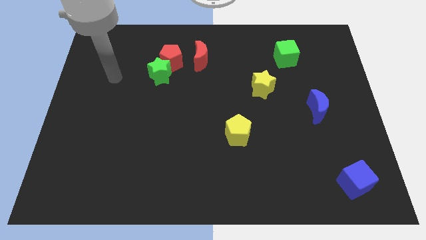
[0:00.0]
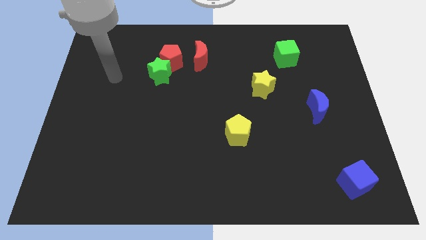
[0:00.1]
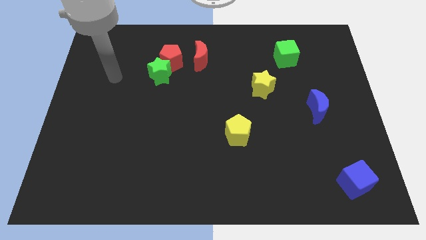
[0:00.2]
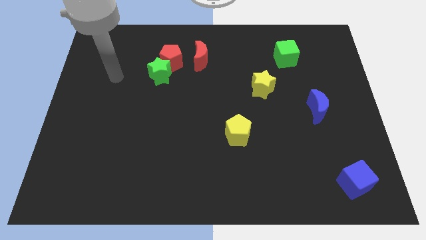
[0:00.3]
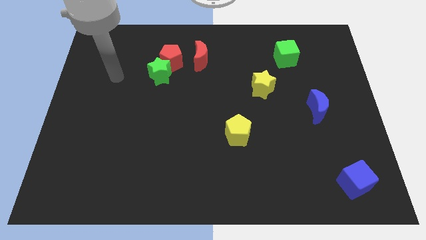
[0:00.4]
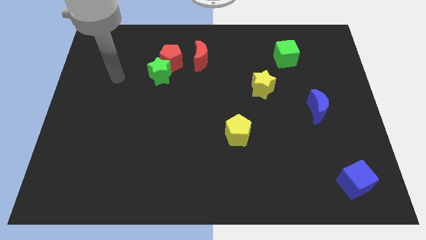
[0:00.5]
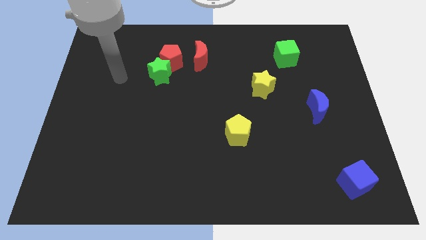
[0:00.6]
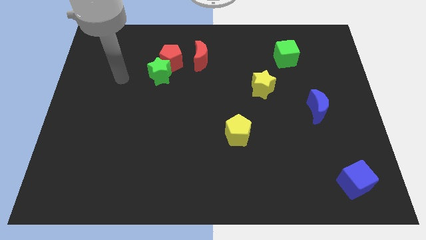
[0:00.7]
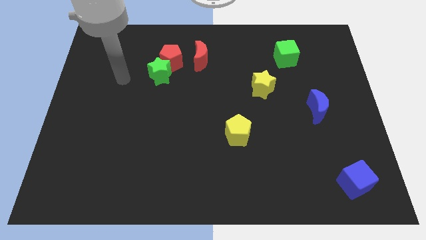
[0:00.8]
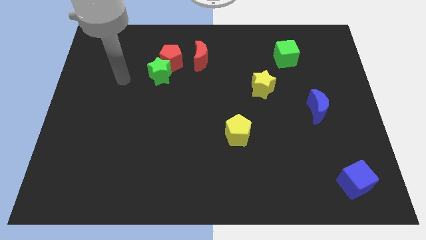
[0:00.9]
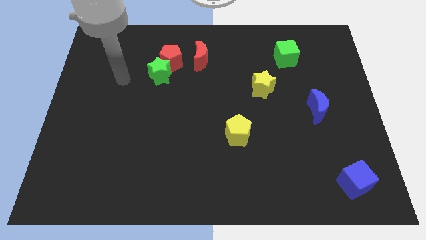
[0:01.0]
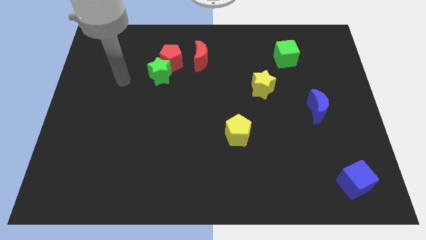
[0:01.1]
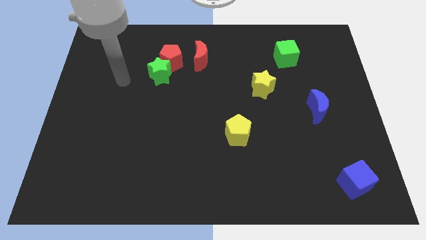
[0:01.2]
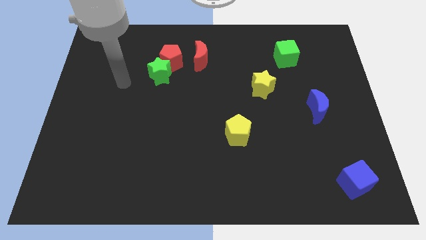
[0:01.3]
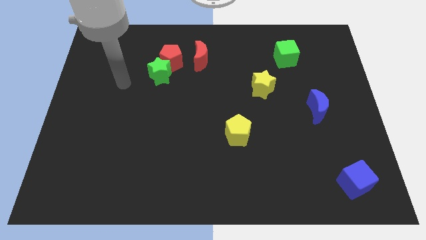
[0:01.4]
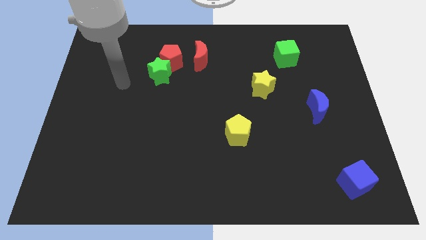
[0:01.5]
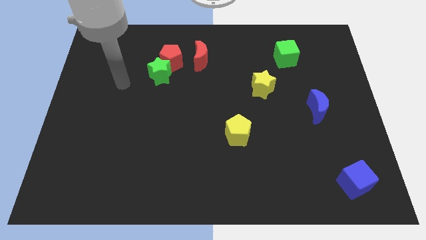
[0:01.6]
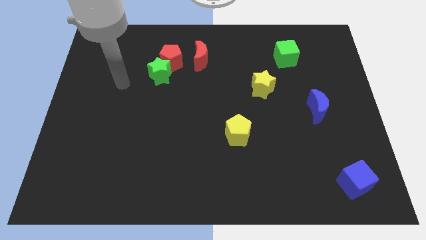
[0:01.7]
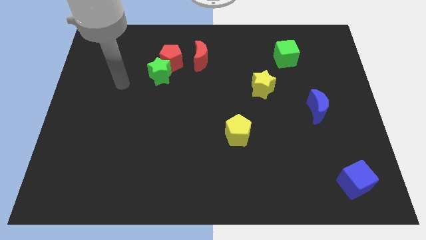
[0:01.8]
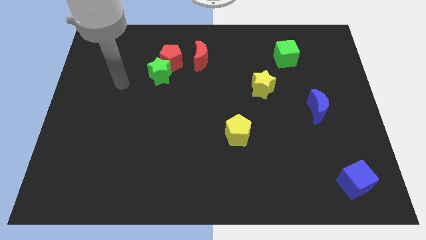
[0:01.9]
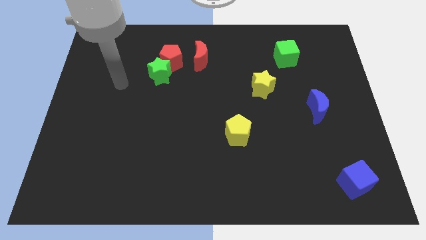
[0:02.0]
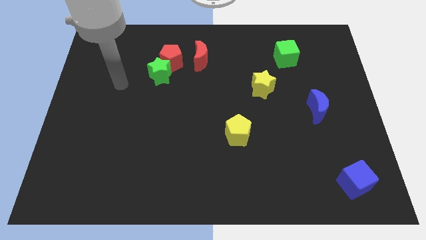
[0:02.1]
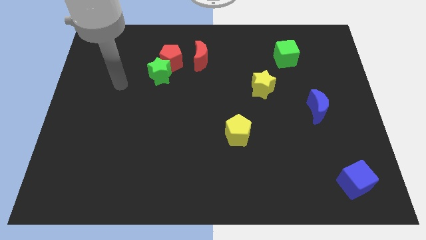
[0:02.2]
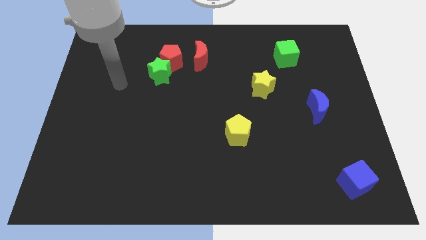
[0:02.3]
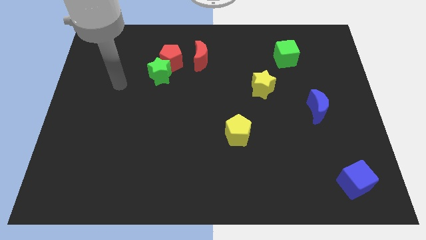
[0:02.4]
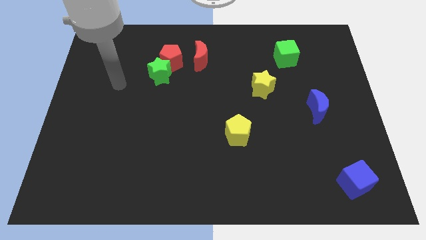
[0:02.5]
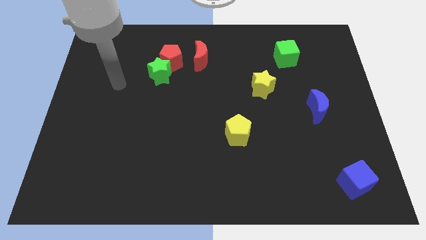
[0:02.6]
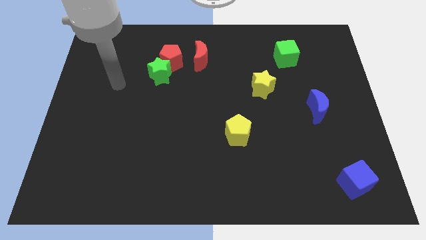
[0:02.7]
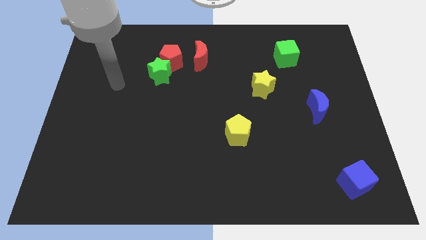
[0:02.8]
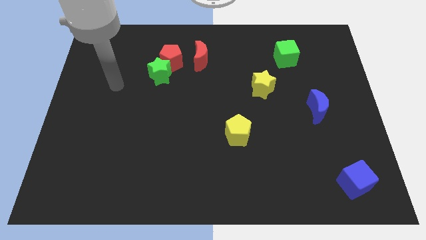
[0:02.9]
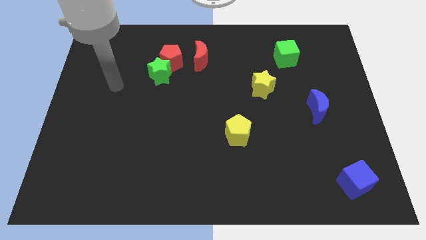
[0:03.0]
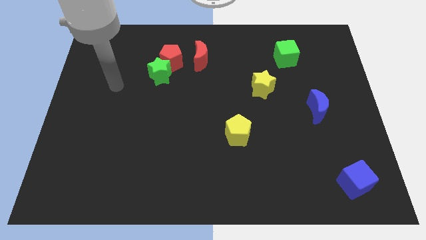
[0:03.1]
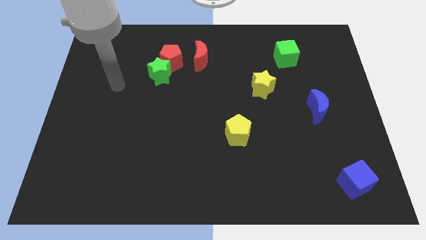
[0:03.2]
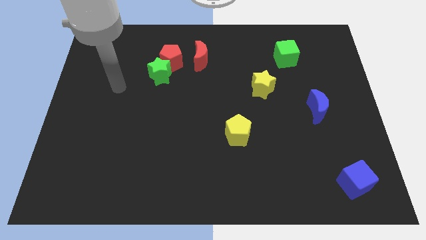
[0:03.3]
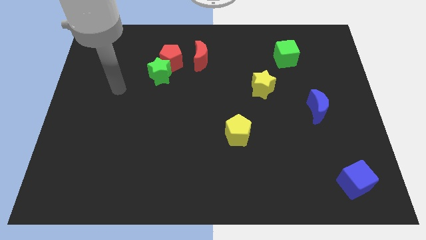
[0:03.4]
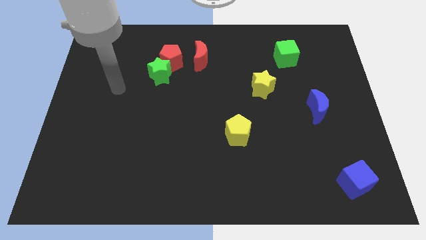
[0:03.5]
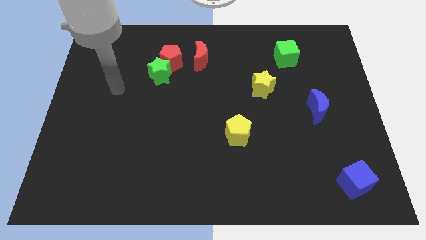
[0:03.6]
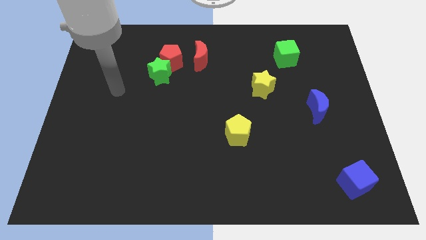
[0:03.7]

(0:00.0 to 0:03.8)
move your arm left to the green star

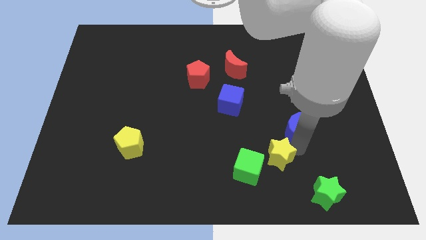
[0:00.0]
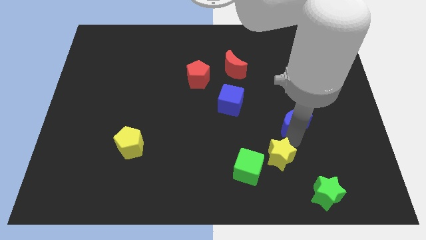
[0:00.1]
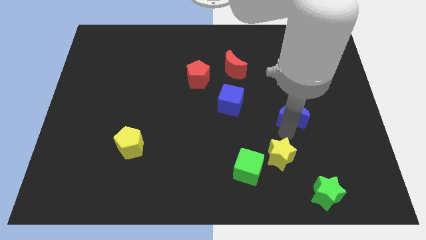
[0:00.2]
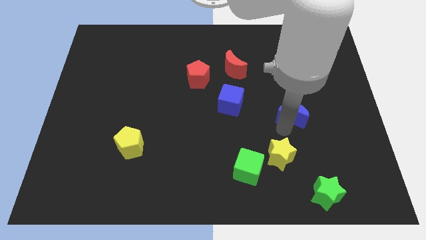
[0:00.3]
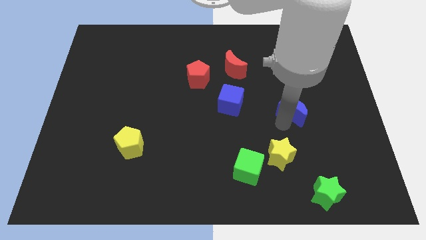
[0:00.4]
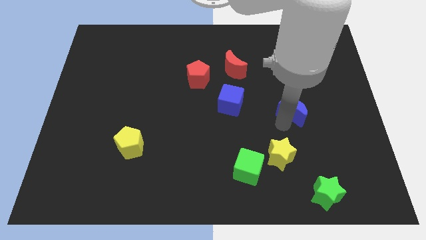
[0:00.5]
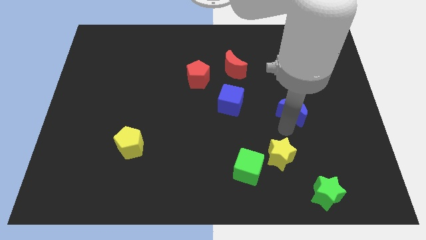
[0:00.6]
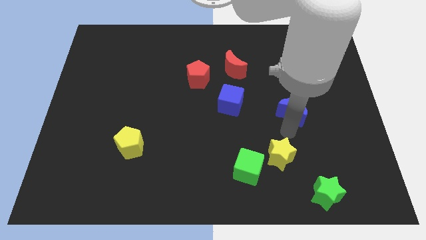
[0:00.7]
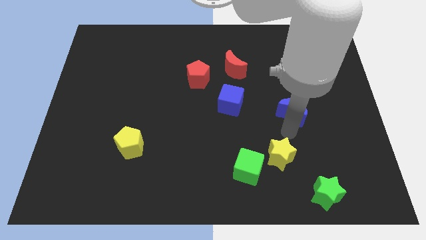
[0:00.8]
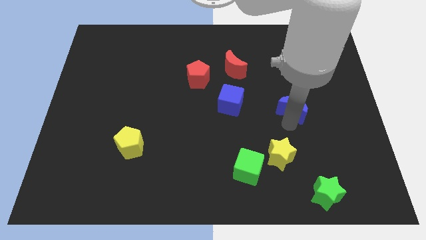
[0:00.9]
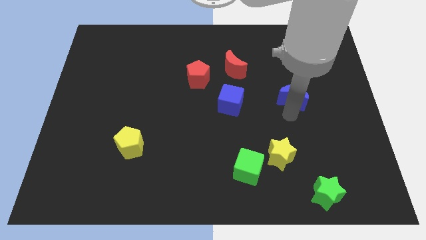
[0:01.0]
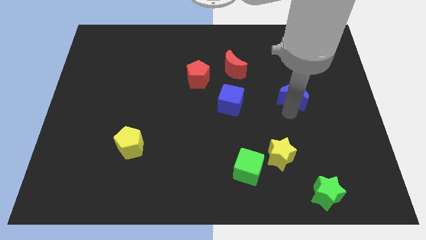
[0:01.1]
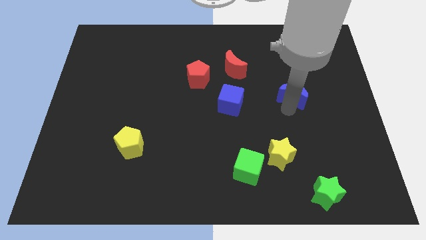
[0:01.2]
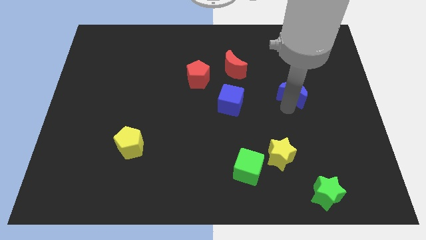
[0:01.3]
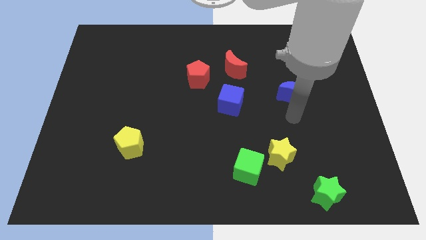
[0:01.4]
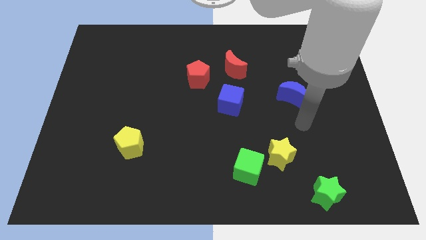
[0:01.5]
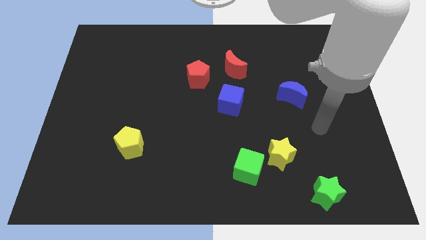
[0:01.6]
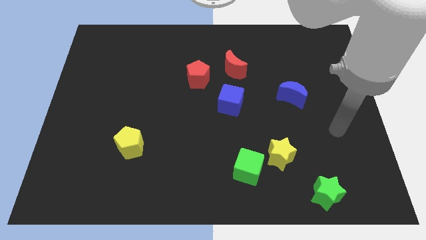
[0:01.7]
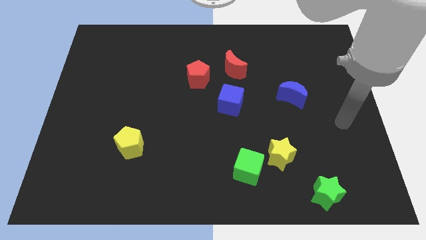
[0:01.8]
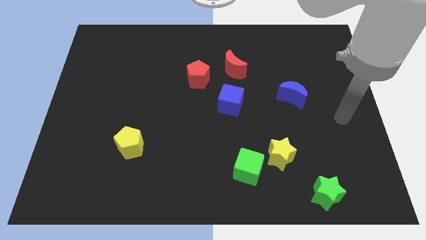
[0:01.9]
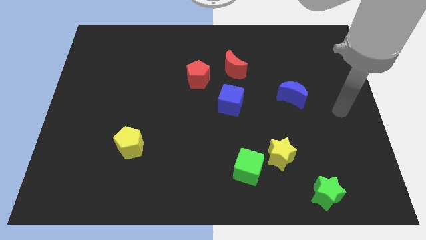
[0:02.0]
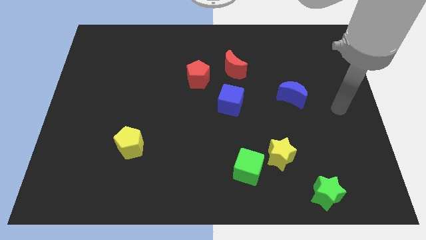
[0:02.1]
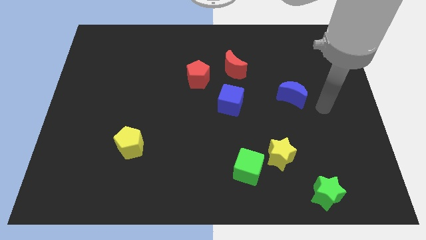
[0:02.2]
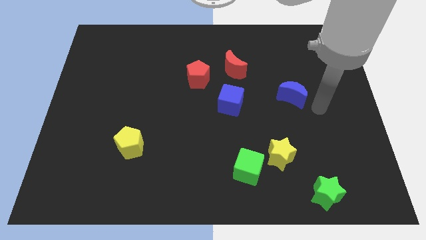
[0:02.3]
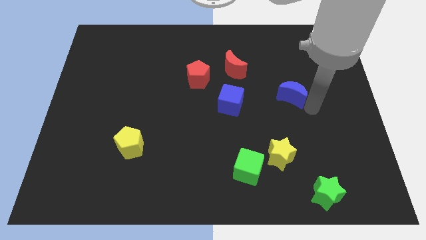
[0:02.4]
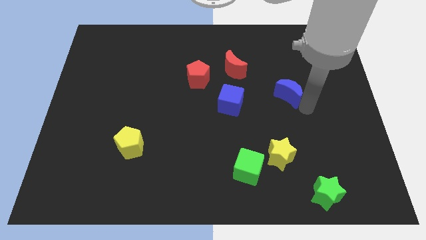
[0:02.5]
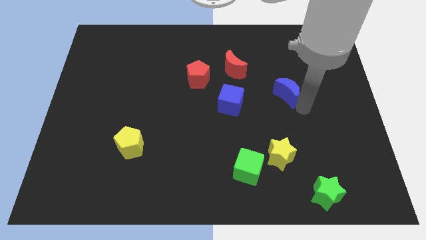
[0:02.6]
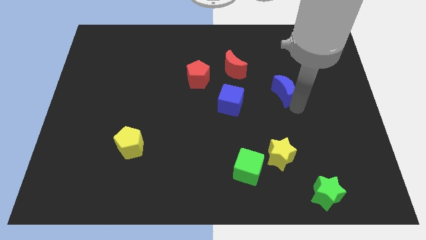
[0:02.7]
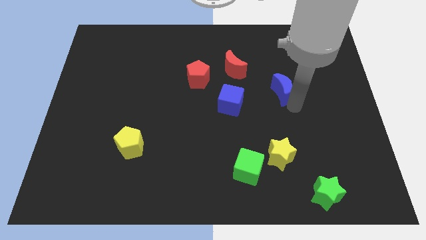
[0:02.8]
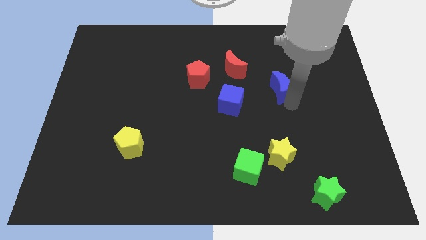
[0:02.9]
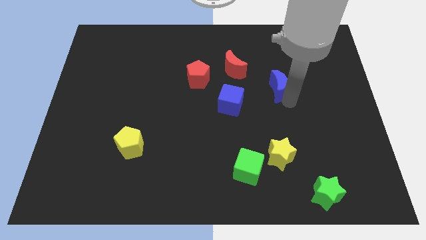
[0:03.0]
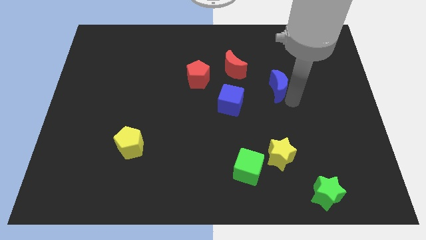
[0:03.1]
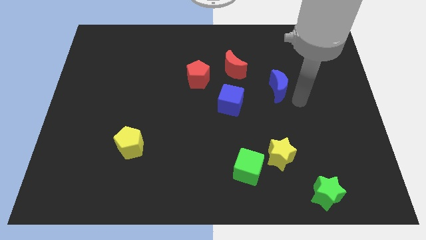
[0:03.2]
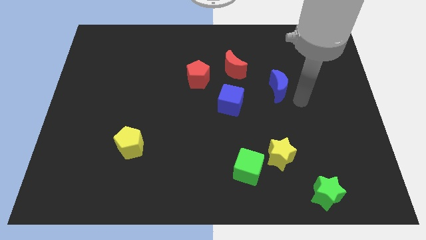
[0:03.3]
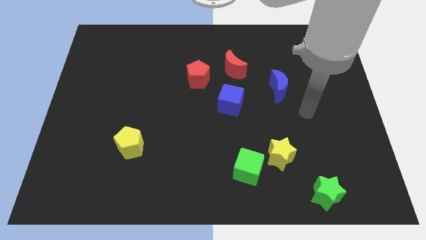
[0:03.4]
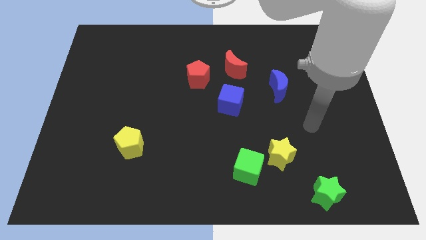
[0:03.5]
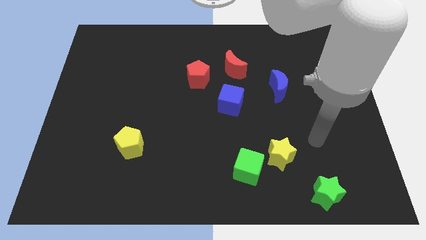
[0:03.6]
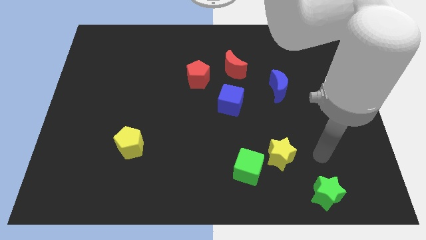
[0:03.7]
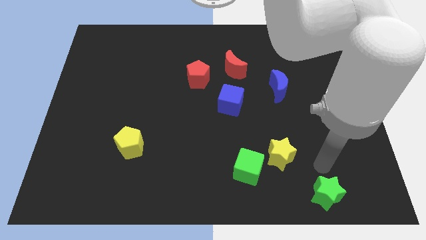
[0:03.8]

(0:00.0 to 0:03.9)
push the blue crescent towards the red crescent

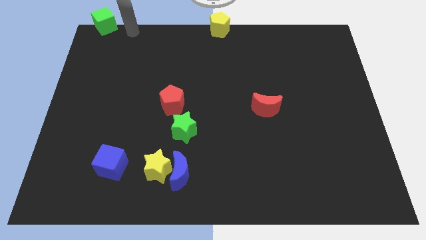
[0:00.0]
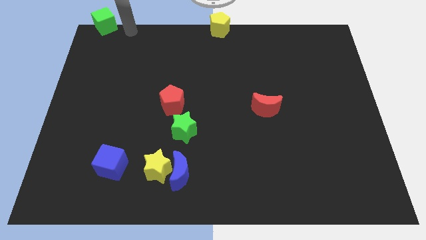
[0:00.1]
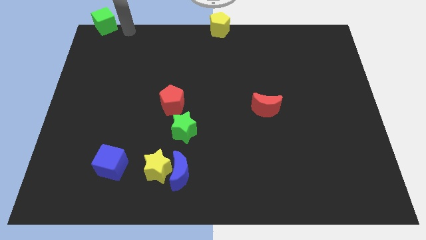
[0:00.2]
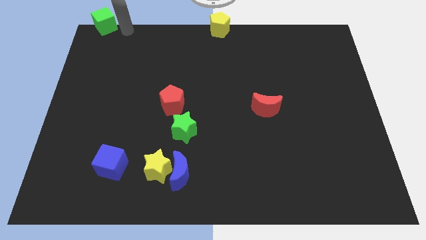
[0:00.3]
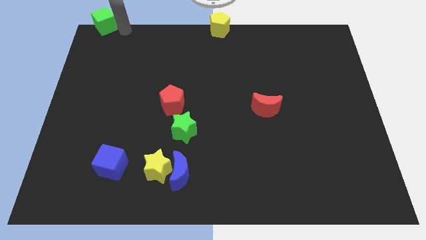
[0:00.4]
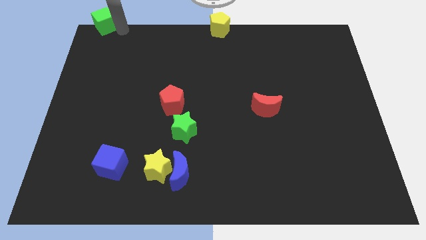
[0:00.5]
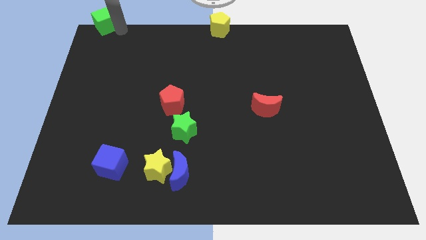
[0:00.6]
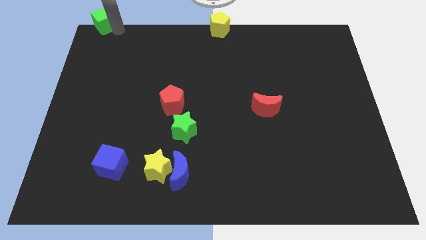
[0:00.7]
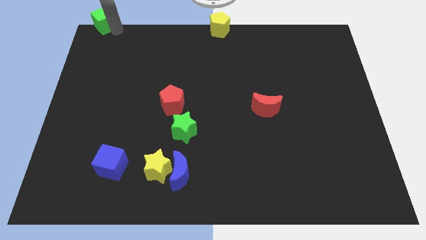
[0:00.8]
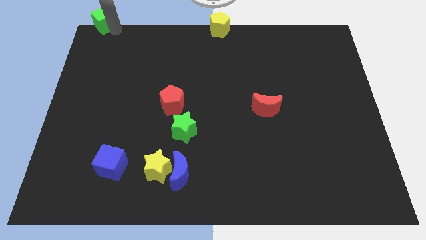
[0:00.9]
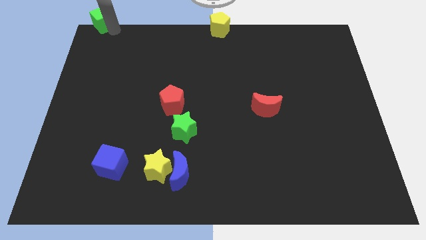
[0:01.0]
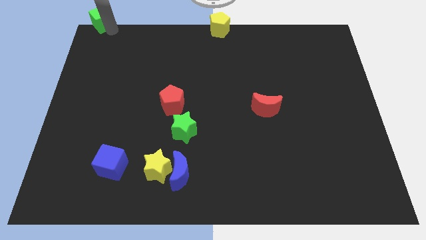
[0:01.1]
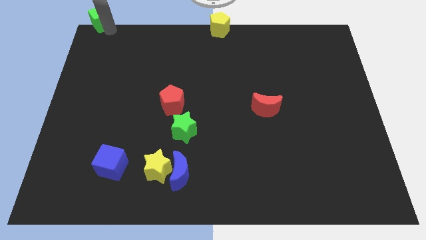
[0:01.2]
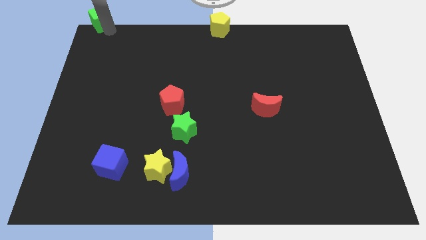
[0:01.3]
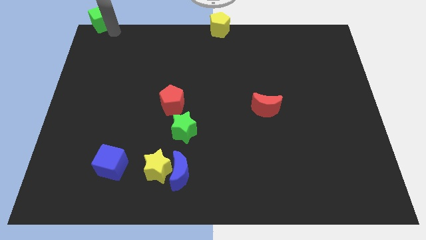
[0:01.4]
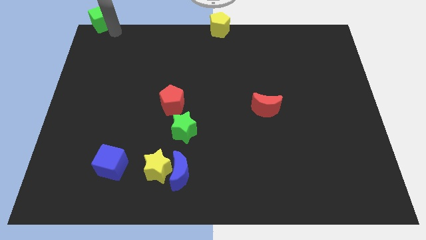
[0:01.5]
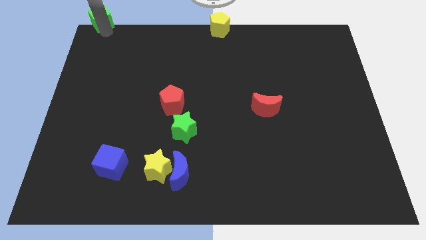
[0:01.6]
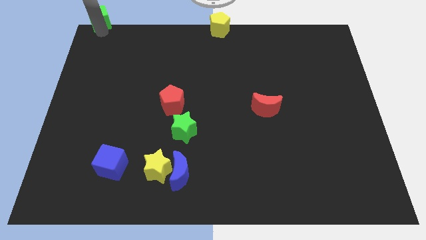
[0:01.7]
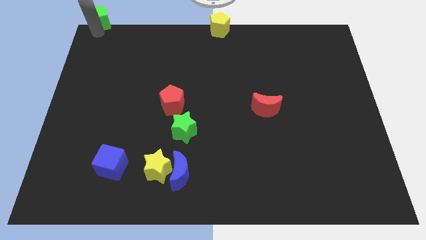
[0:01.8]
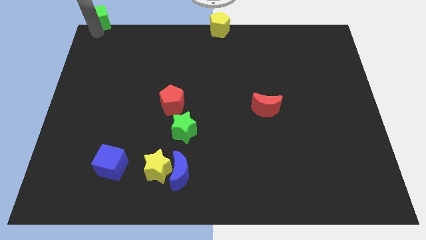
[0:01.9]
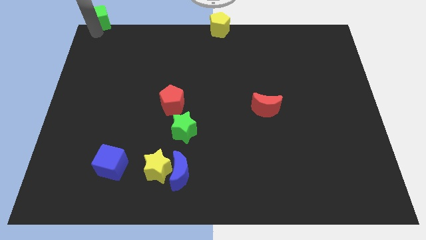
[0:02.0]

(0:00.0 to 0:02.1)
put the green cube slightly towards the top left side of the board
